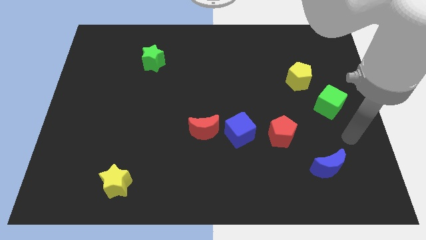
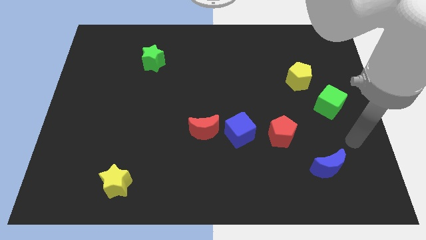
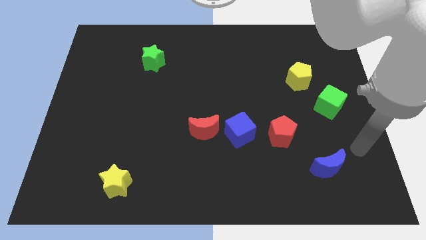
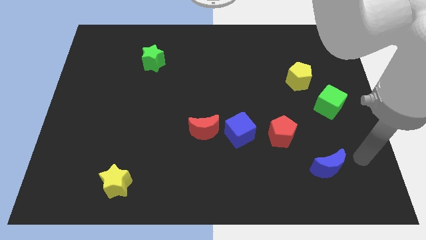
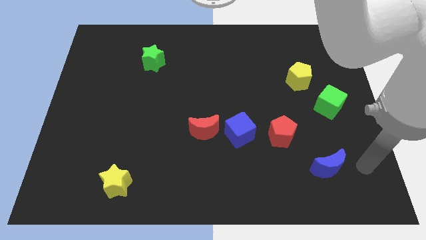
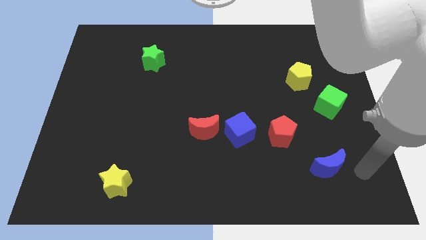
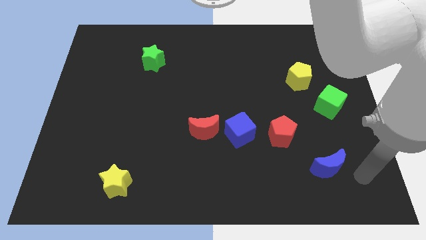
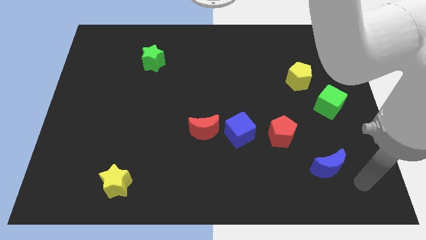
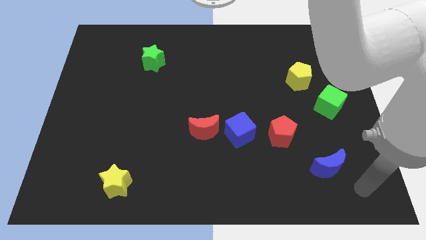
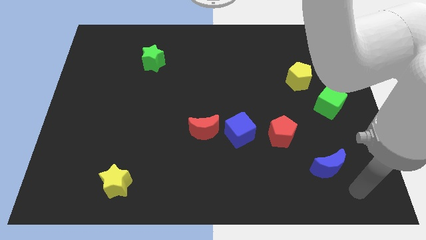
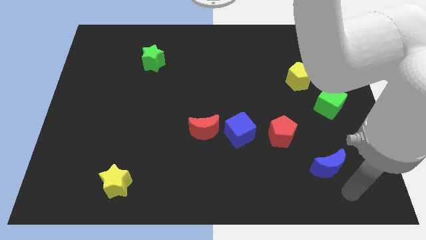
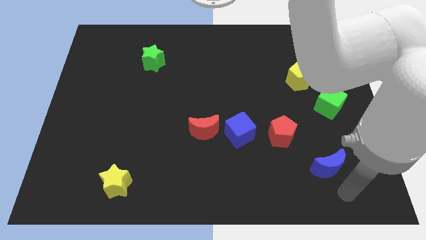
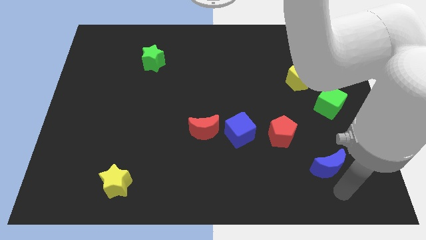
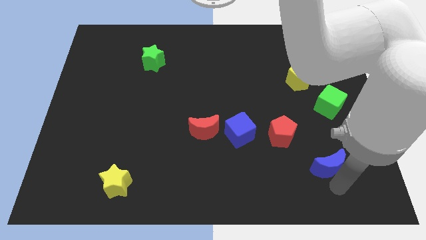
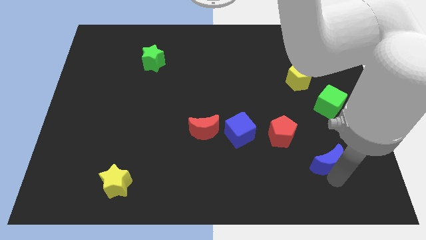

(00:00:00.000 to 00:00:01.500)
point the arm at the bottom of the blue crescent

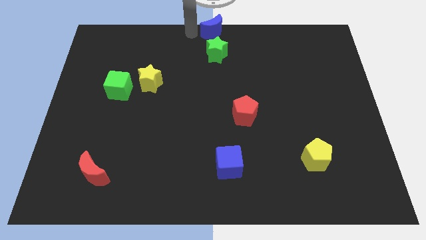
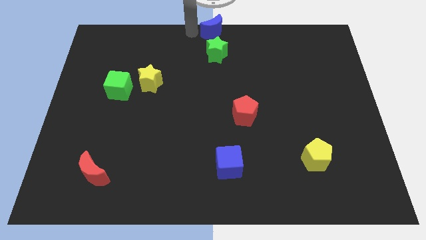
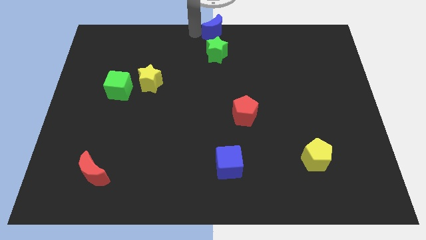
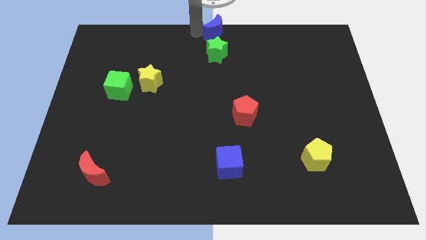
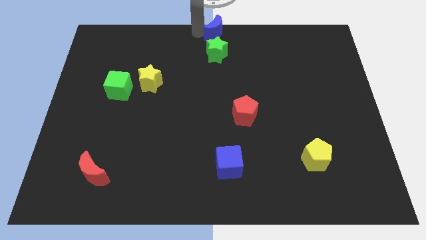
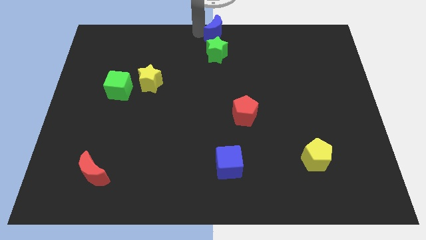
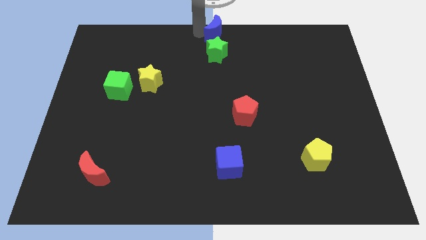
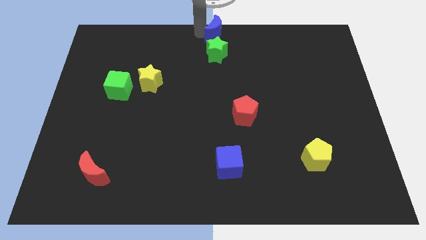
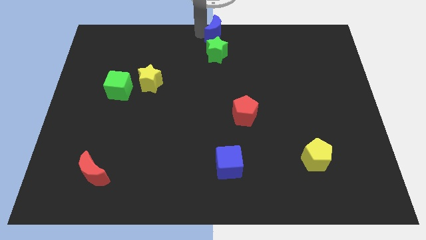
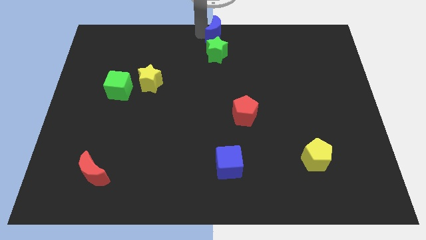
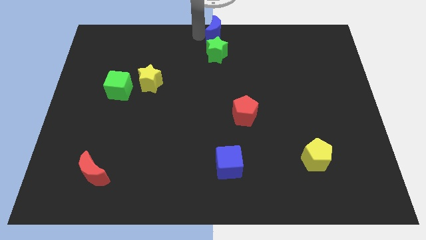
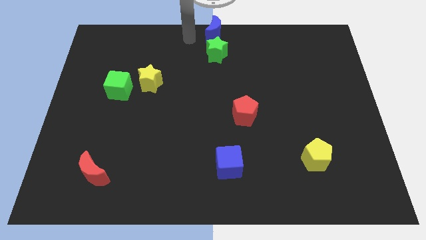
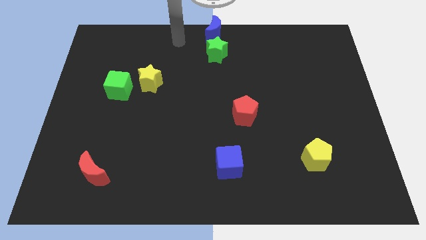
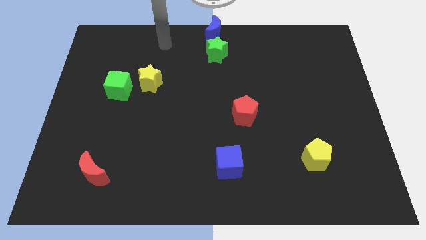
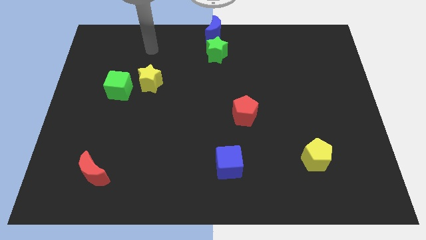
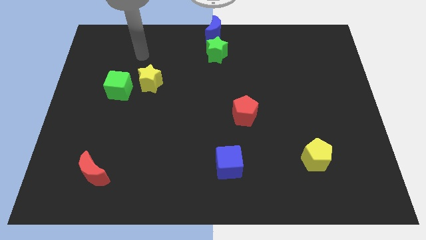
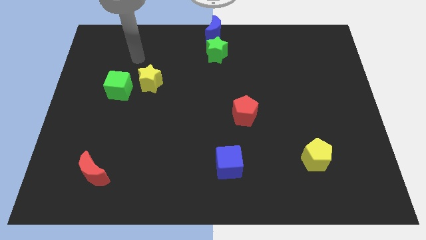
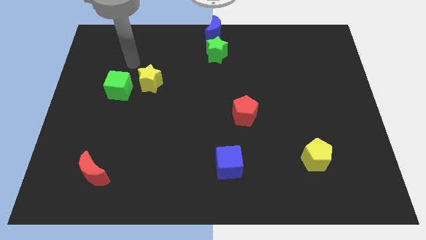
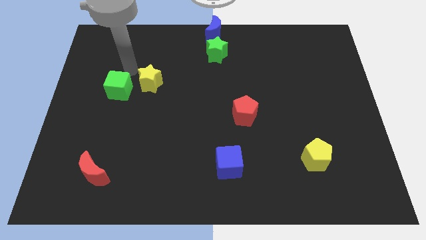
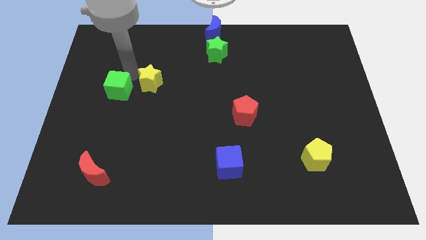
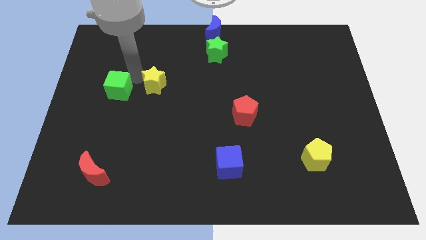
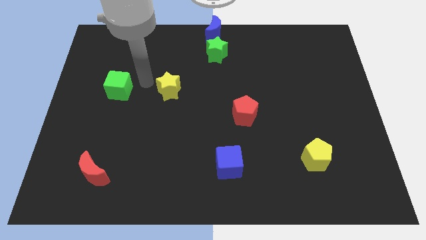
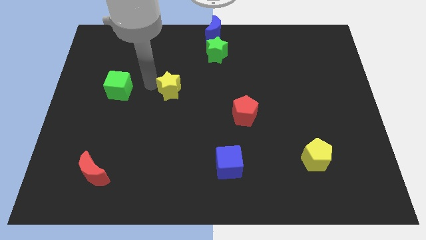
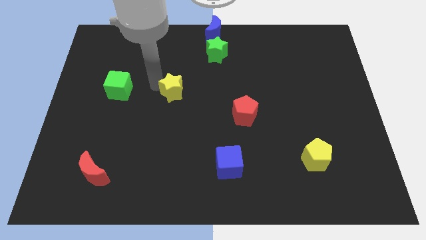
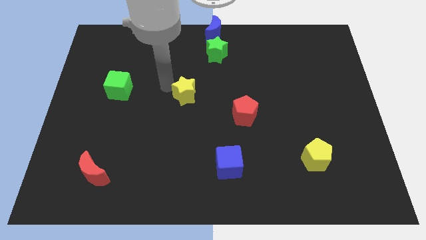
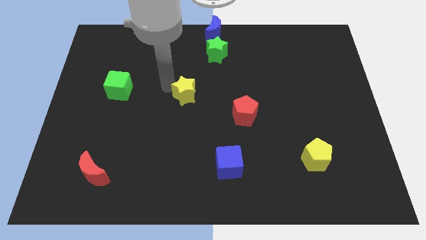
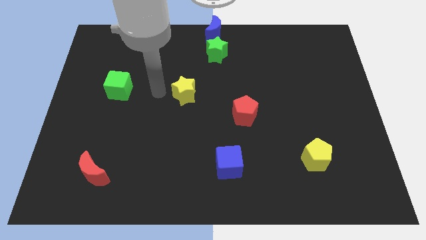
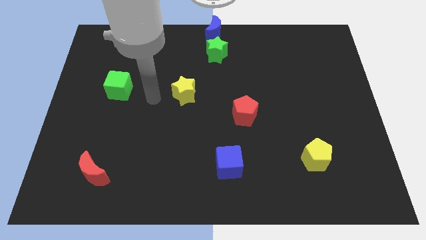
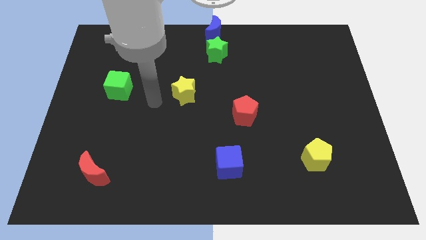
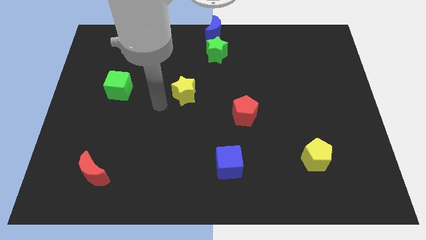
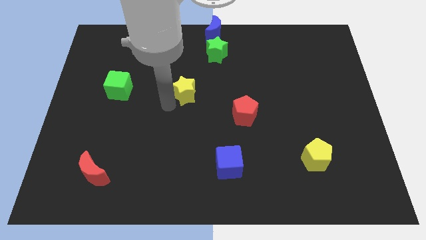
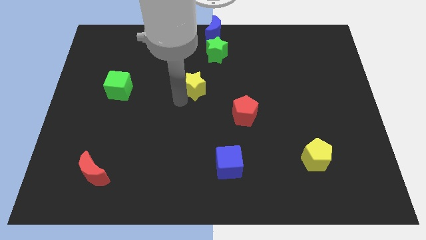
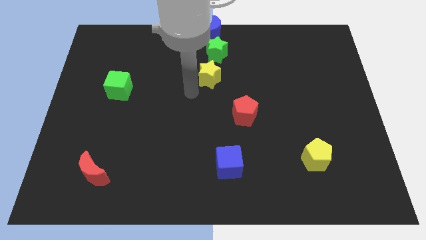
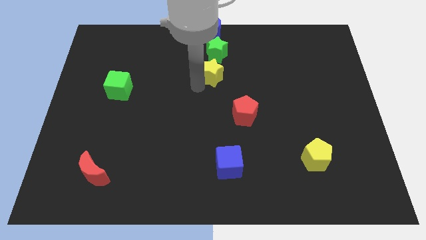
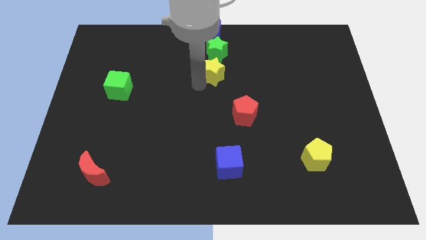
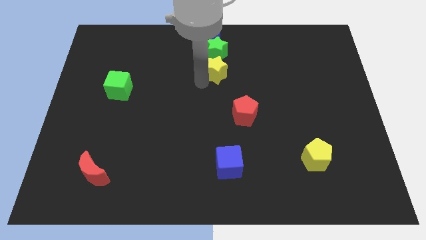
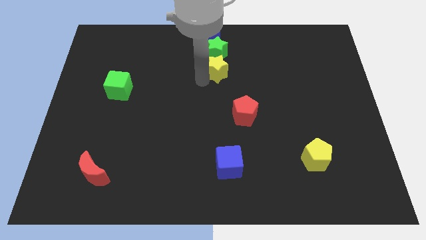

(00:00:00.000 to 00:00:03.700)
move the yellow star below the green star

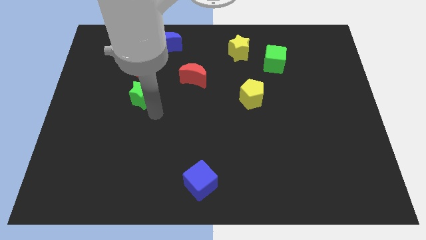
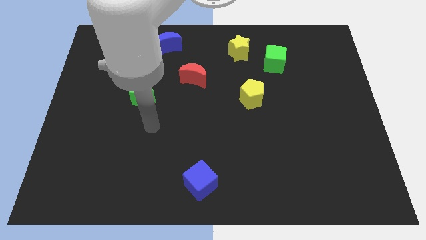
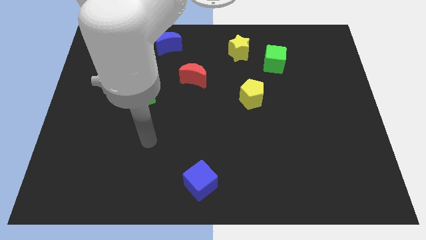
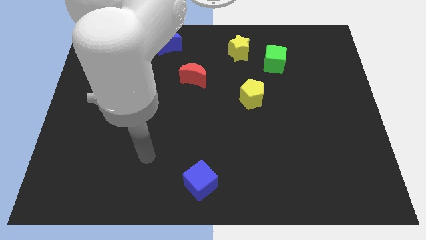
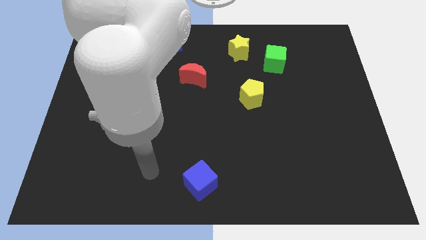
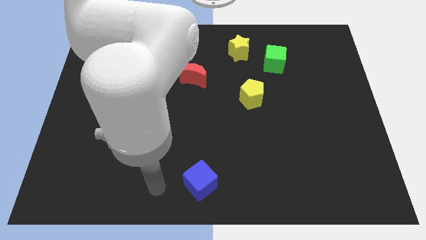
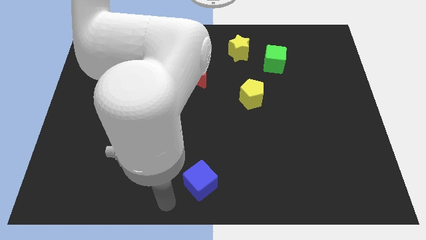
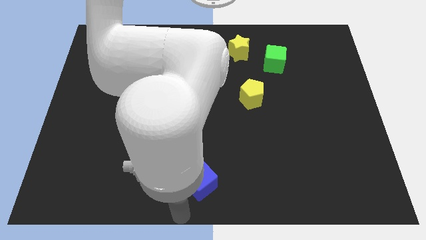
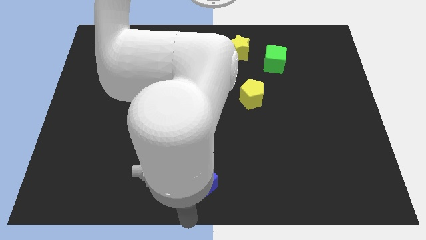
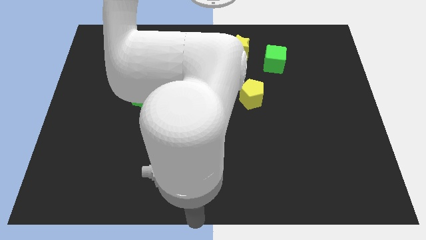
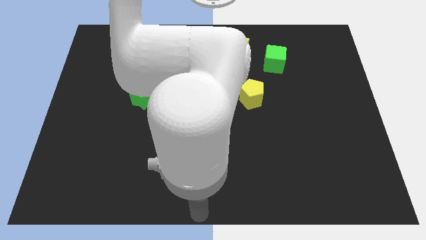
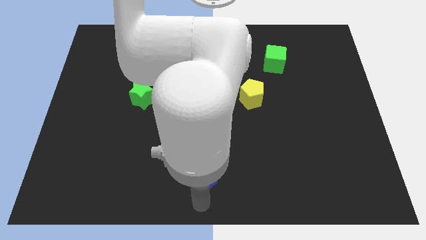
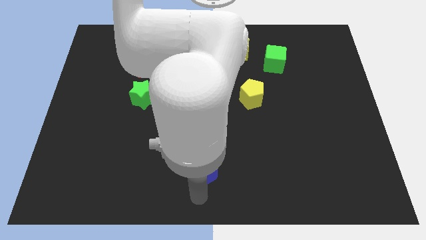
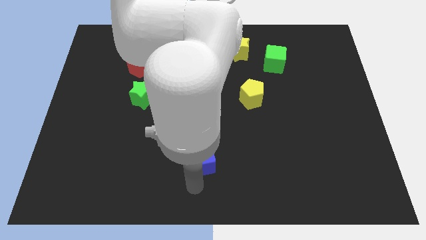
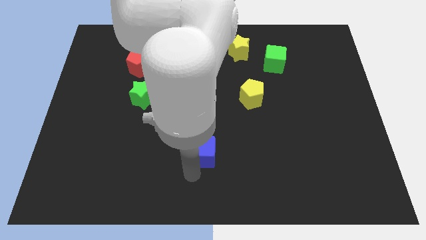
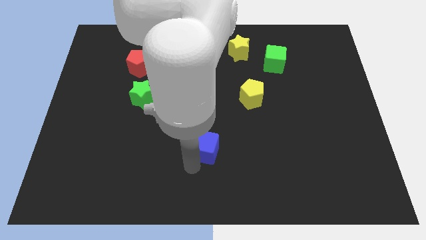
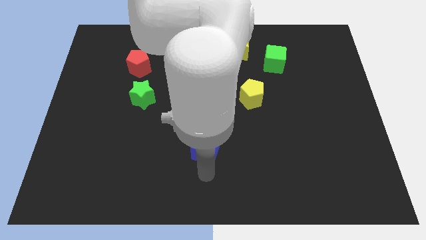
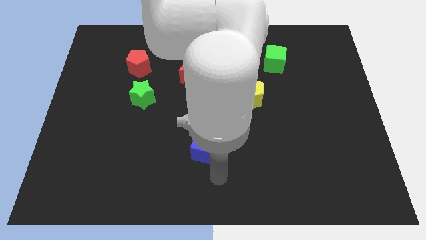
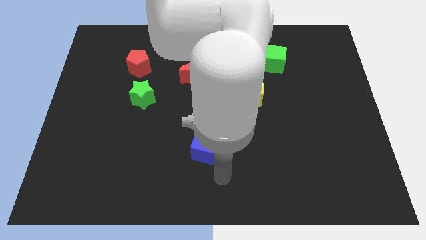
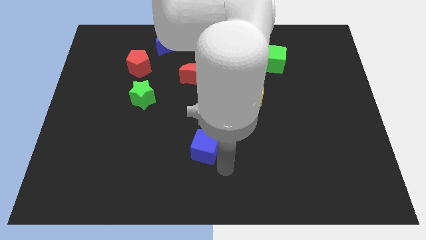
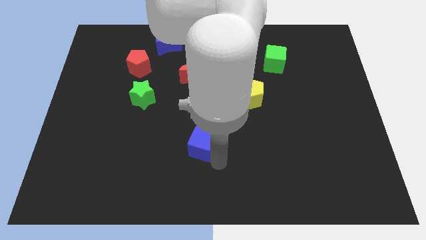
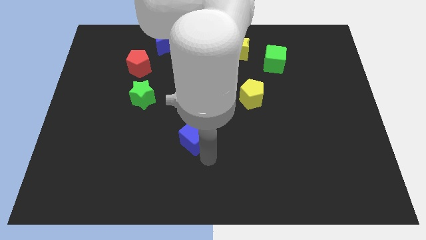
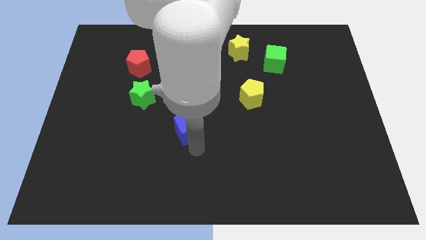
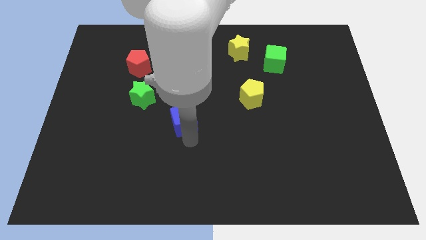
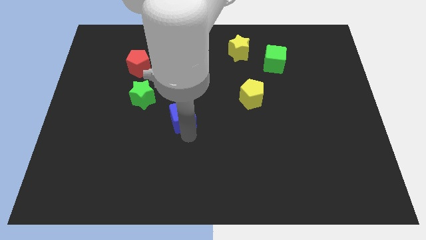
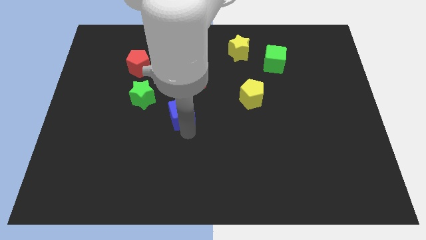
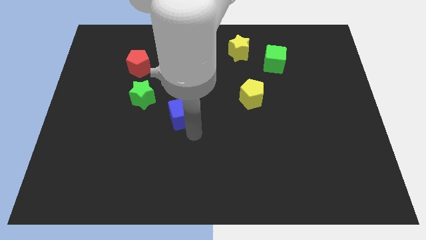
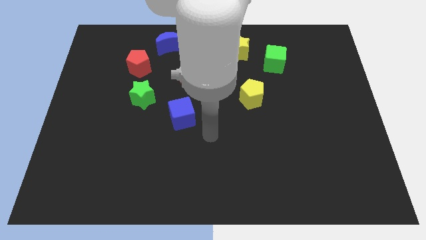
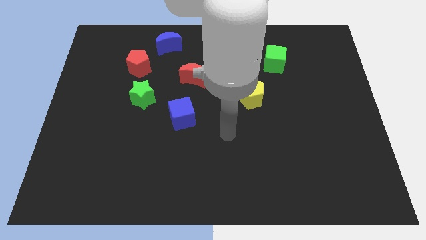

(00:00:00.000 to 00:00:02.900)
push the blue cube vertical to the red crescent

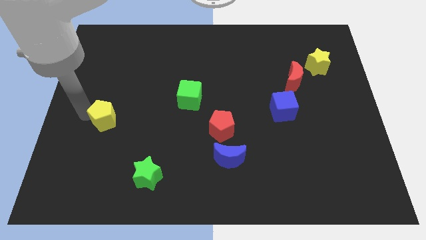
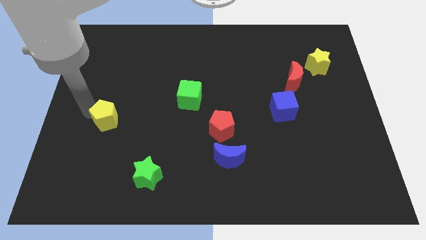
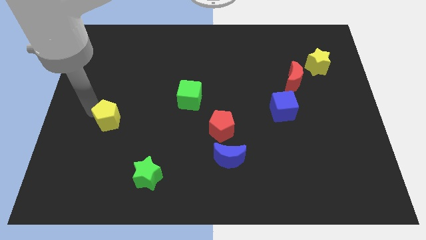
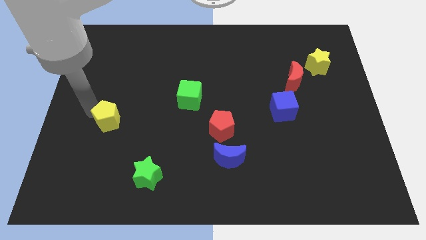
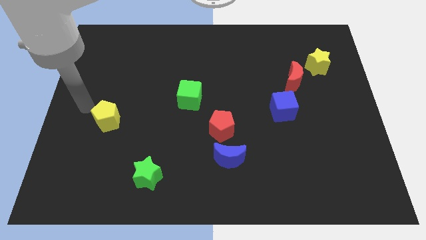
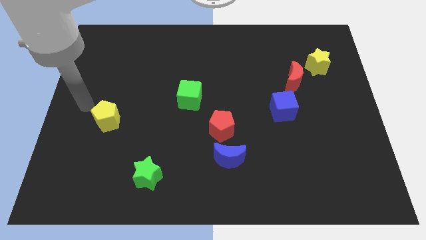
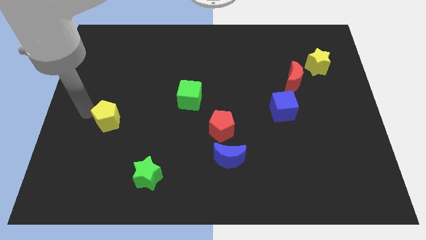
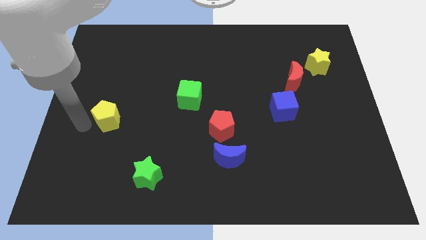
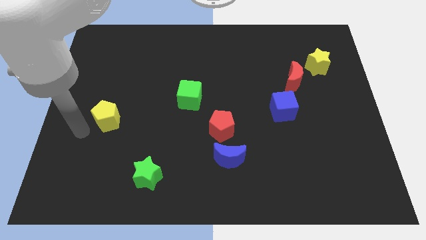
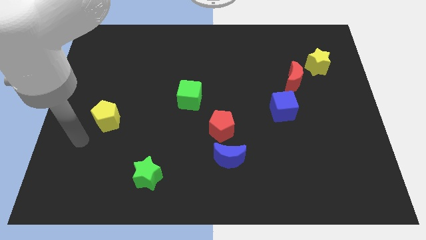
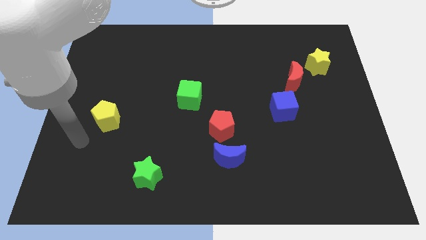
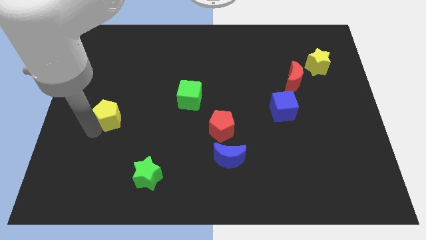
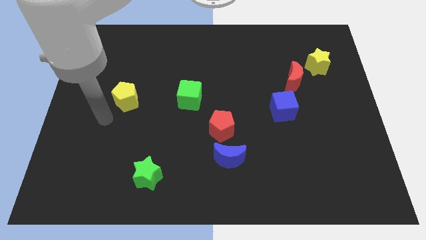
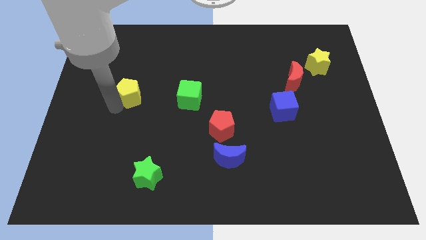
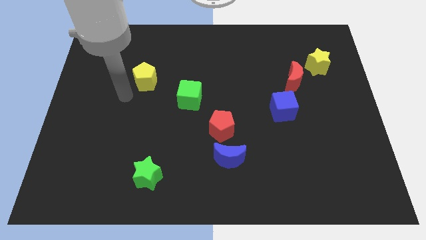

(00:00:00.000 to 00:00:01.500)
move the yellow pentagon to the left of the green cube
